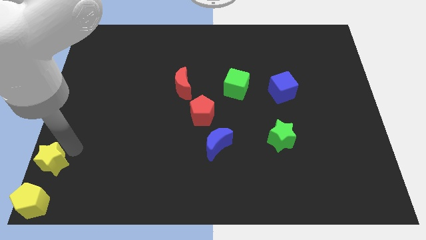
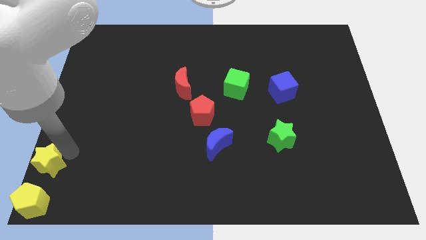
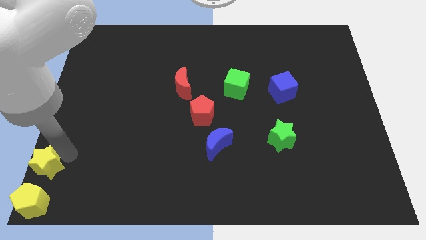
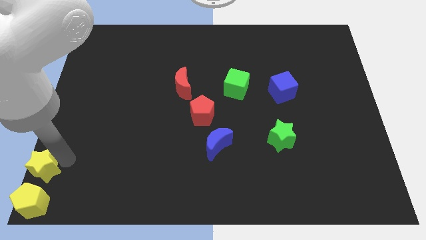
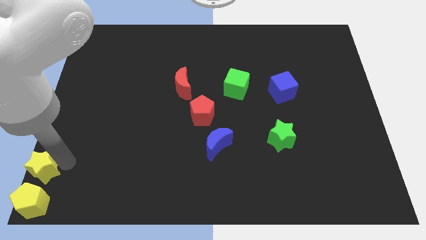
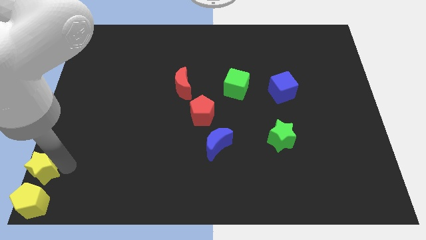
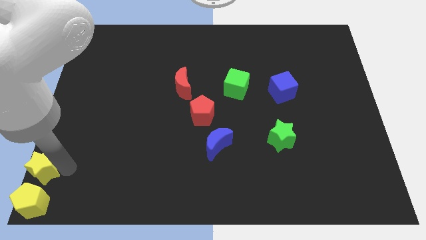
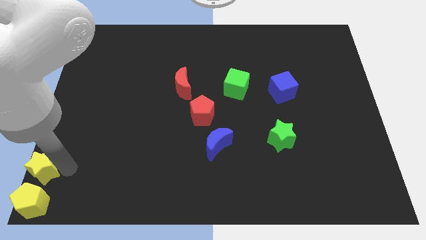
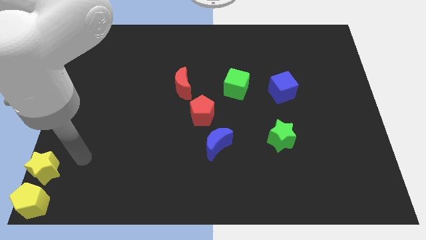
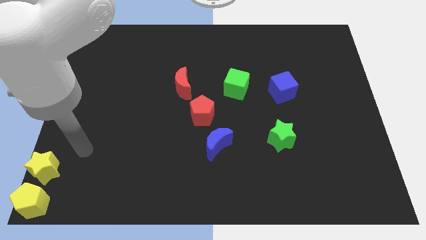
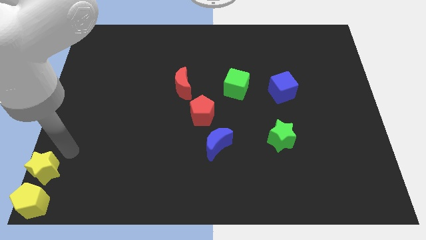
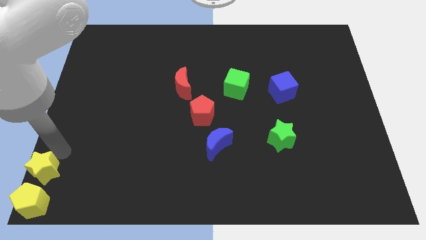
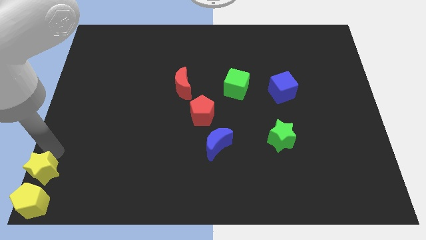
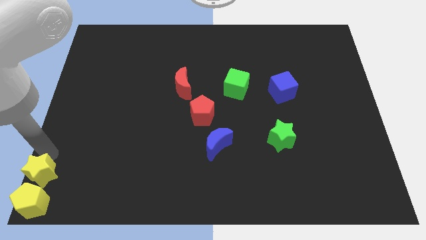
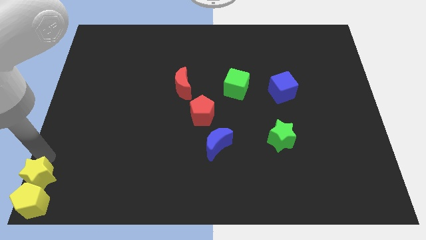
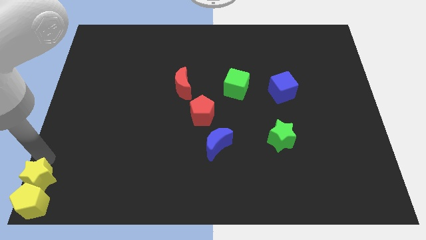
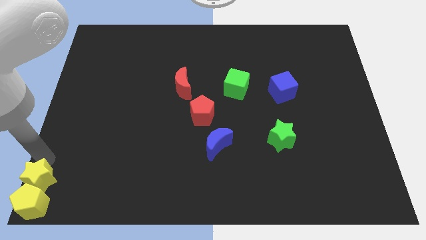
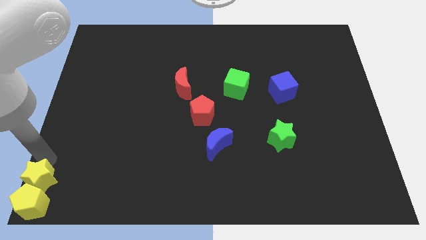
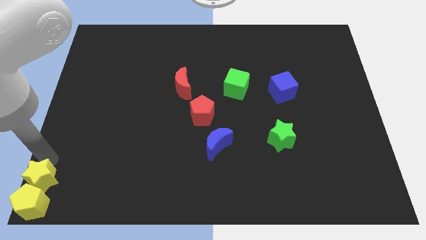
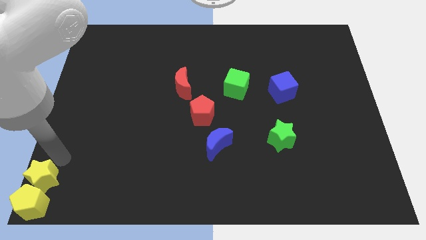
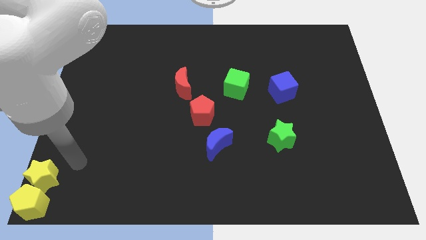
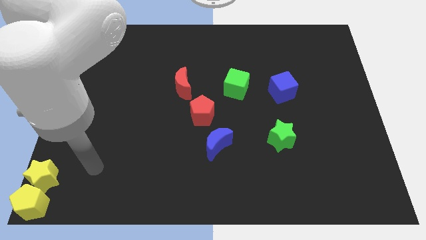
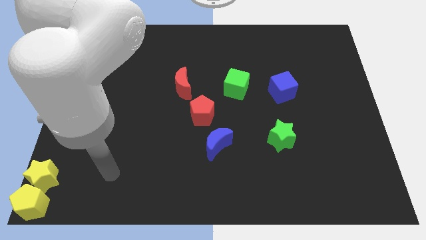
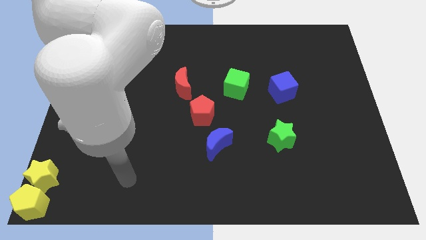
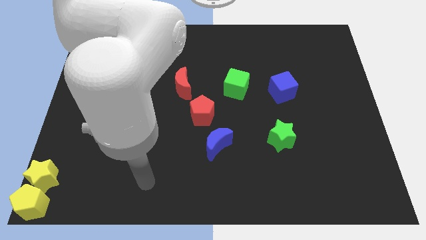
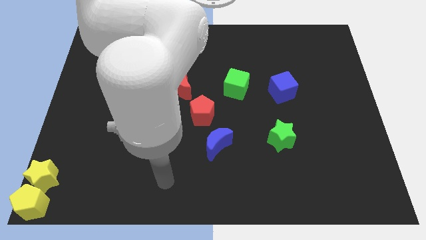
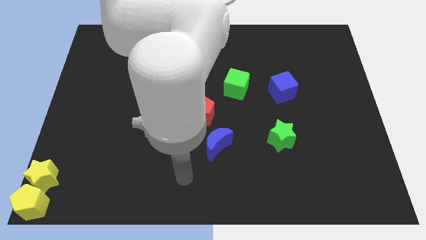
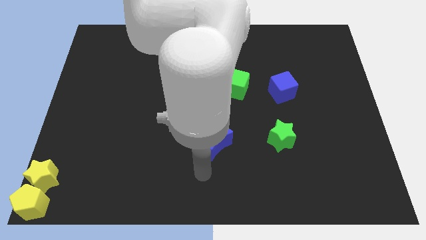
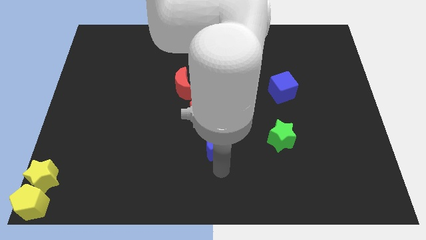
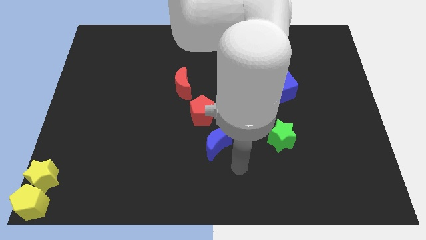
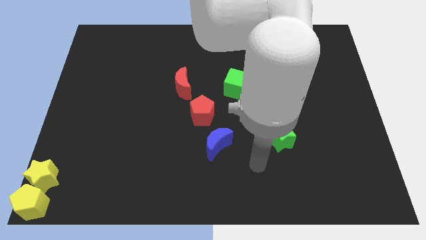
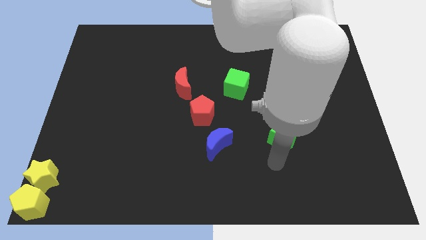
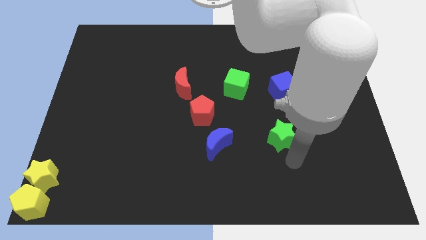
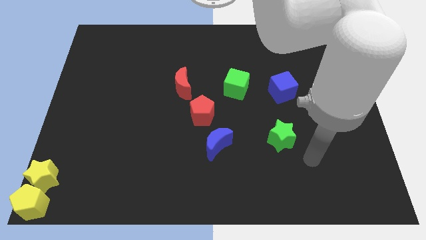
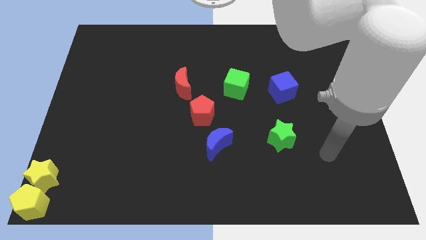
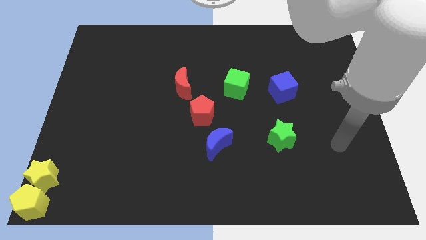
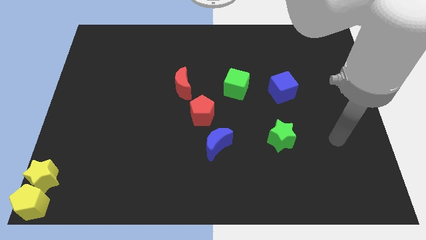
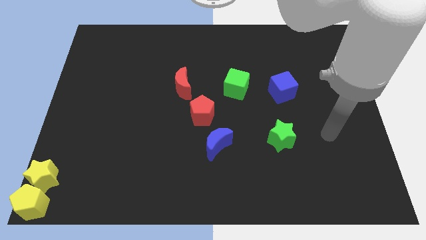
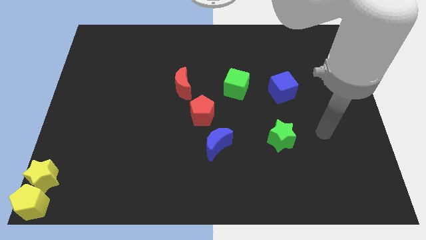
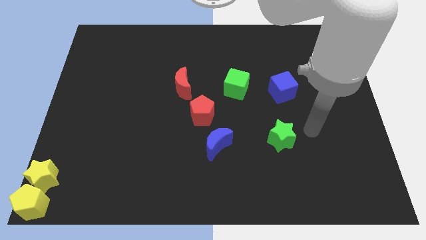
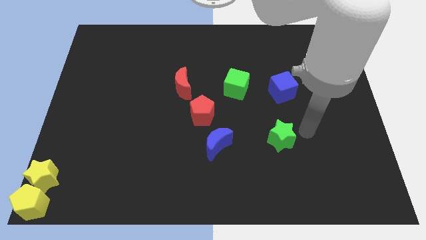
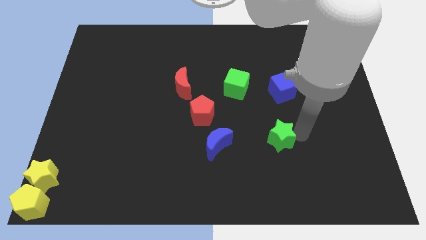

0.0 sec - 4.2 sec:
place the arm to the right of the green star

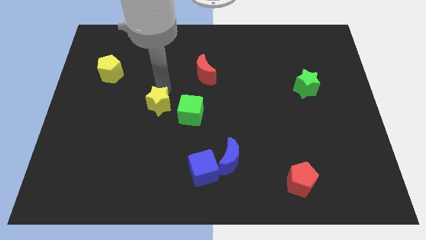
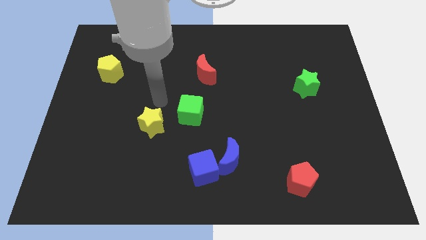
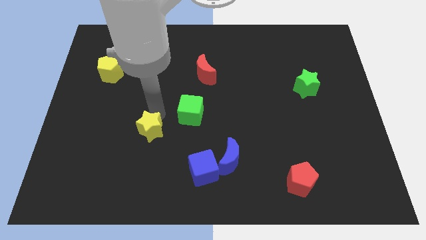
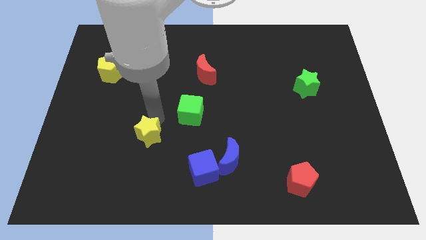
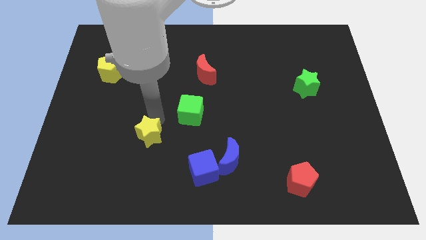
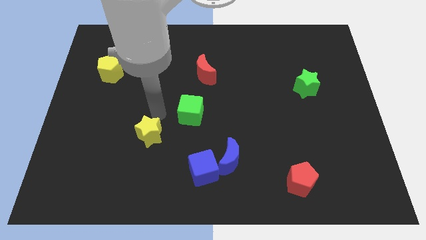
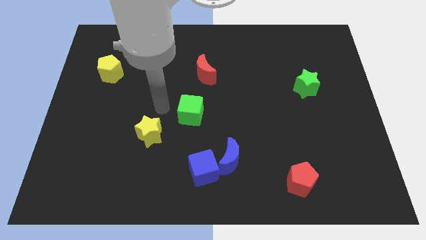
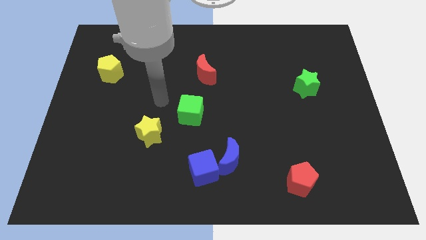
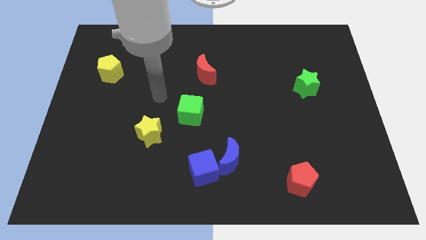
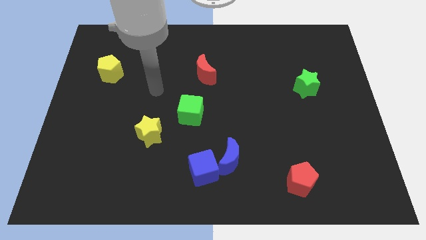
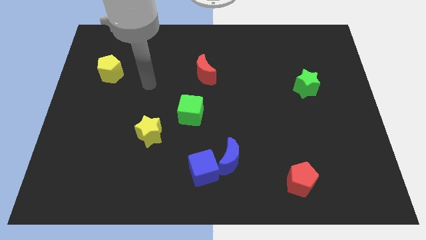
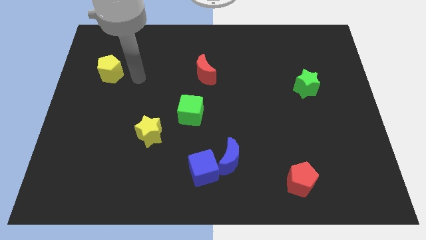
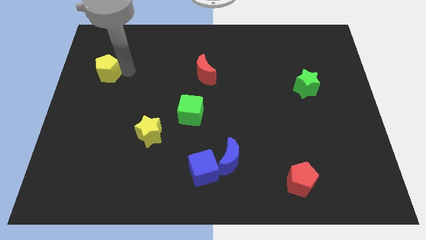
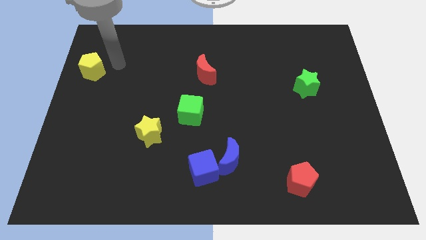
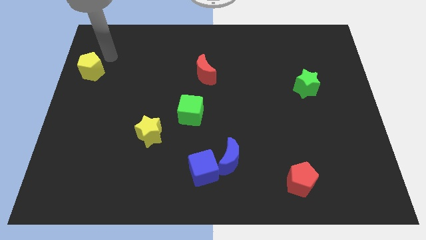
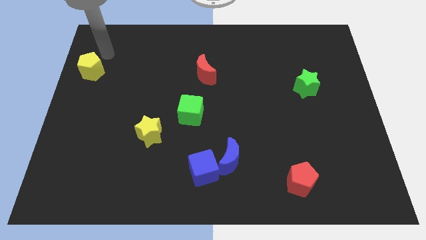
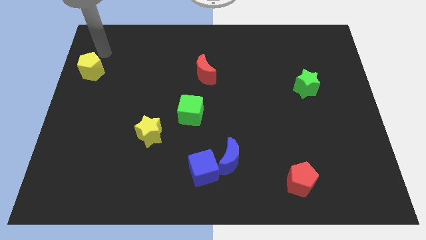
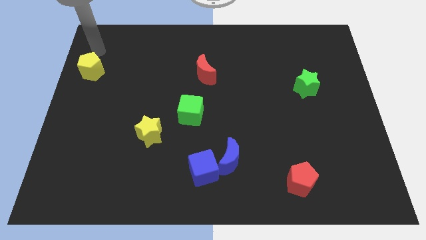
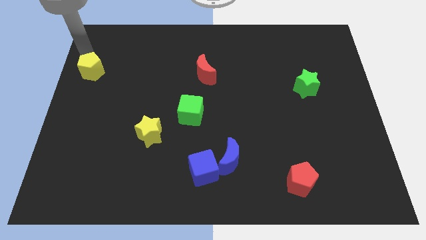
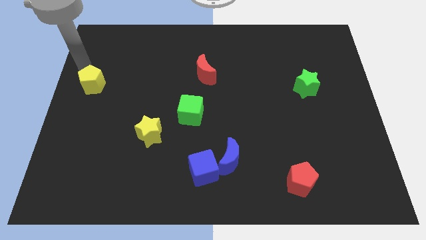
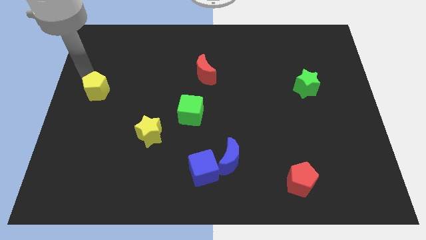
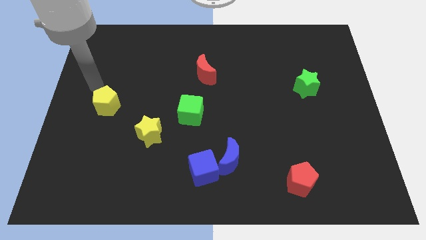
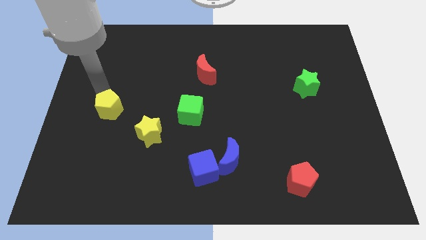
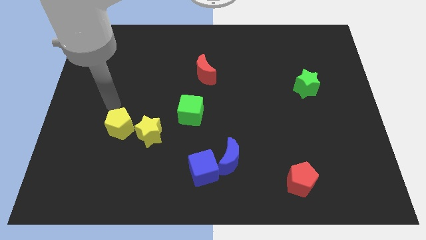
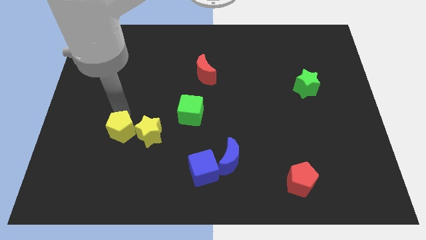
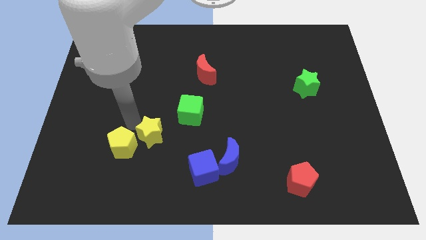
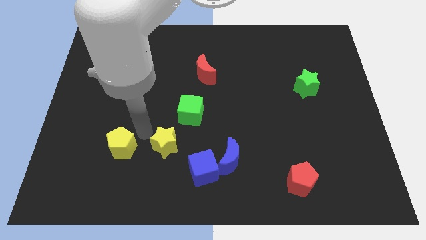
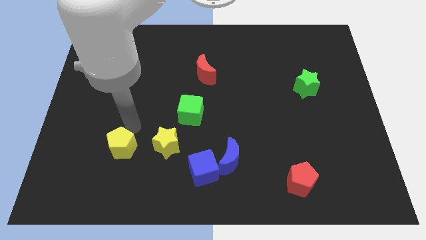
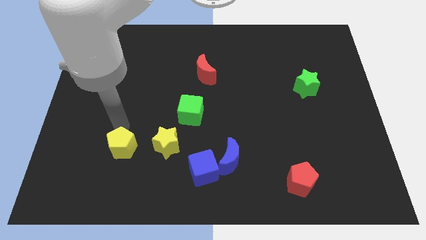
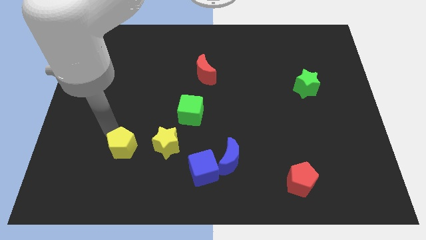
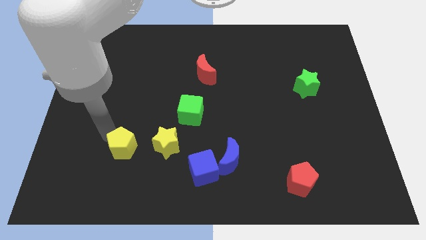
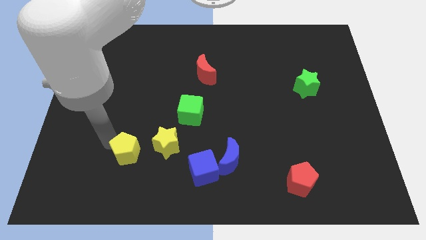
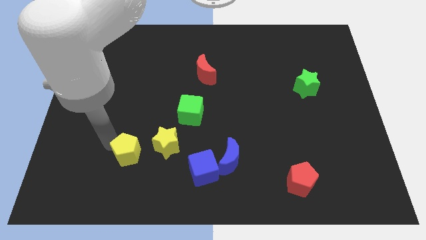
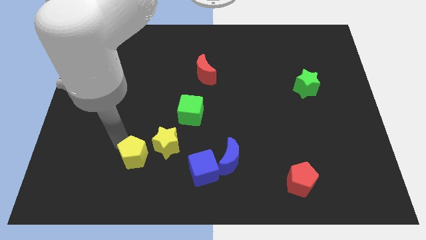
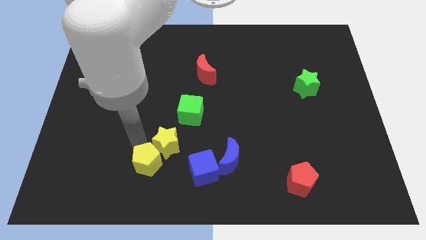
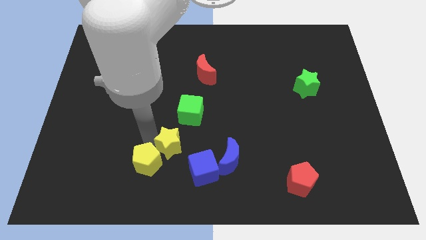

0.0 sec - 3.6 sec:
move the yellow star and yellow pentagon towards the blue block

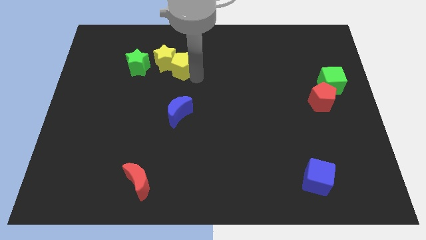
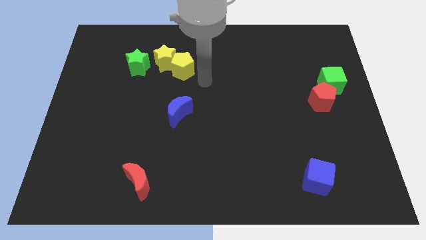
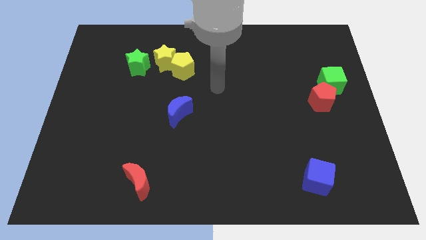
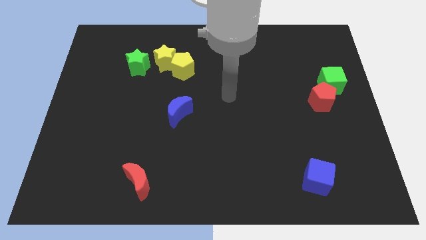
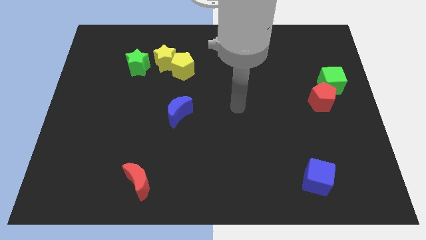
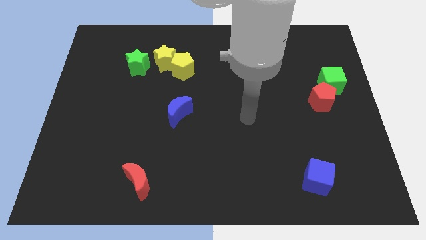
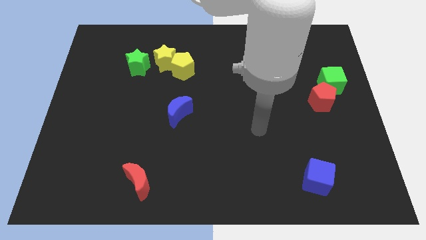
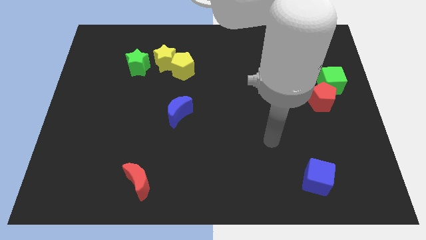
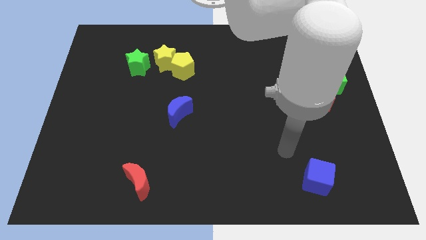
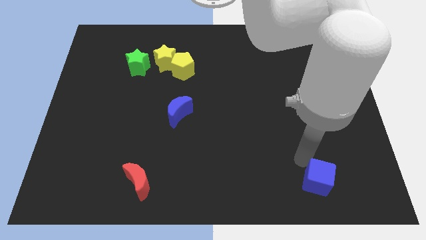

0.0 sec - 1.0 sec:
point the arm to the top left of the blue cube

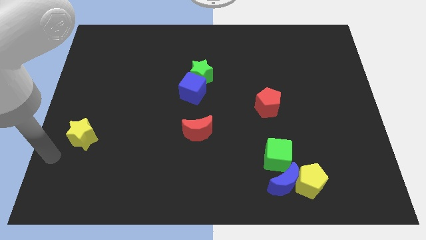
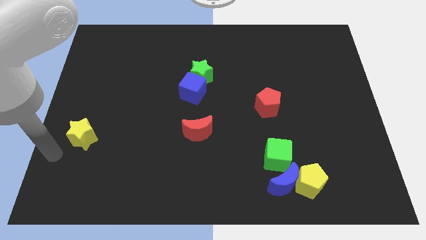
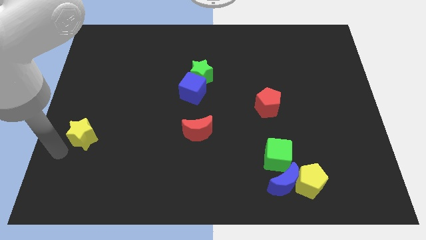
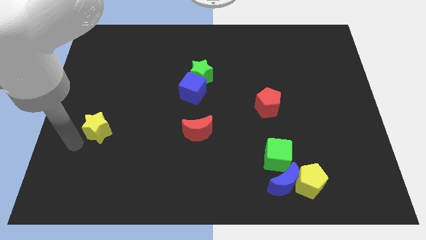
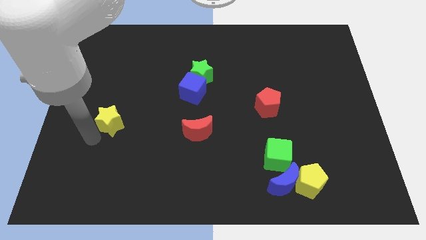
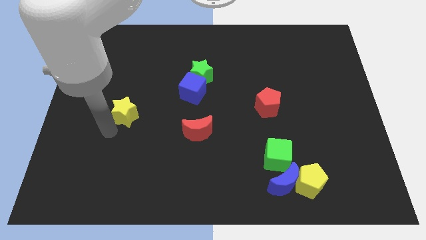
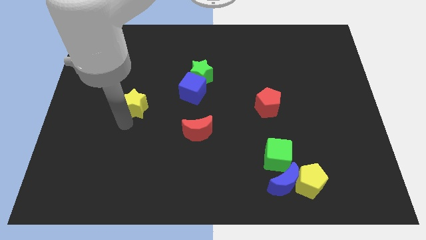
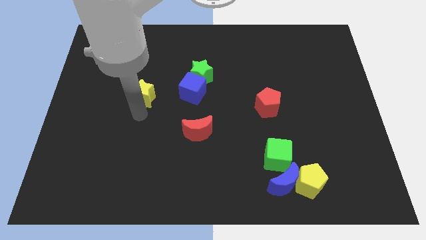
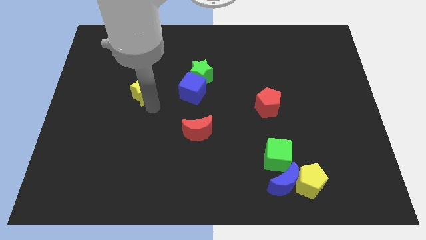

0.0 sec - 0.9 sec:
move the yellow star left to the blue cube
